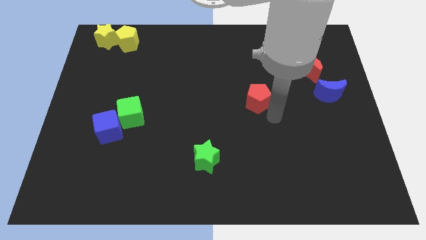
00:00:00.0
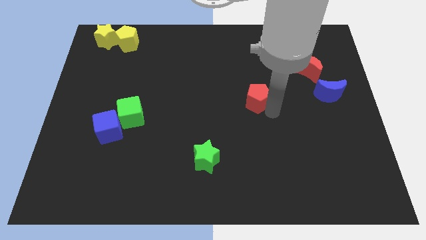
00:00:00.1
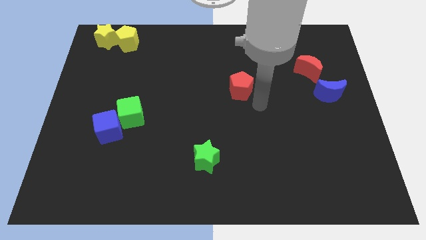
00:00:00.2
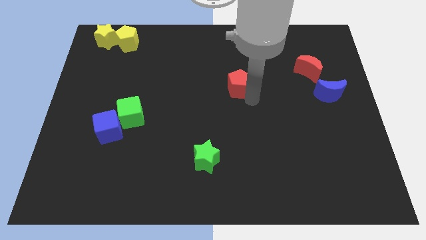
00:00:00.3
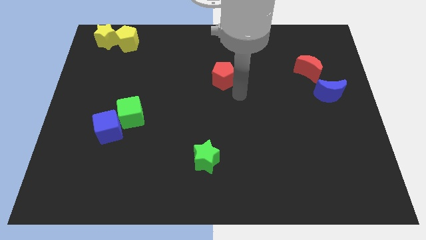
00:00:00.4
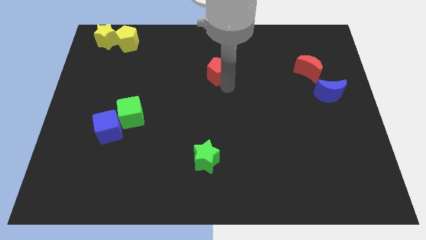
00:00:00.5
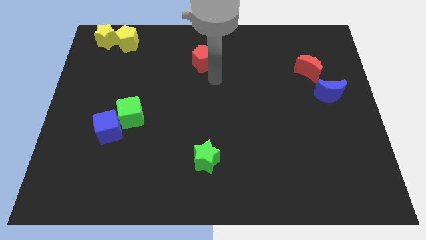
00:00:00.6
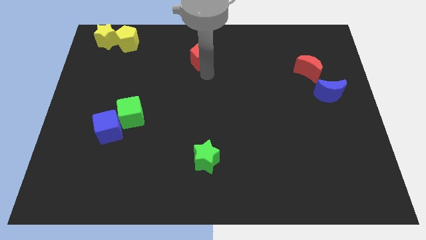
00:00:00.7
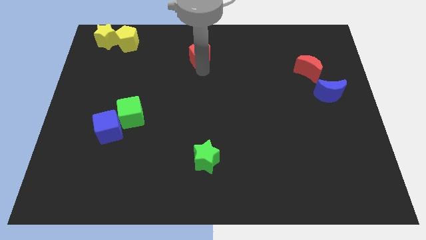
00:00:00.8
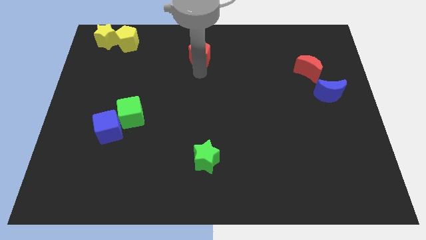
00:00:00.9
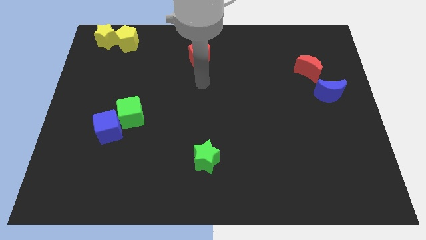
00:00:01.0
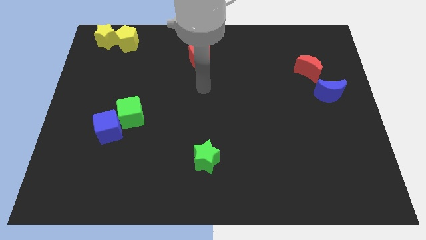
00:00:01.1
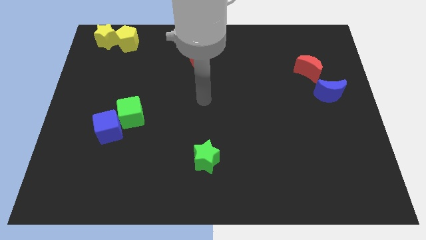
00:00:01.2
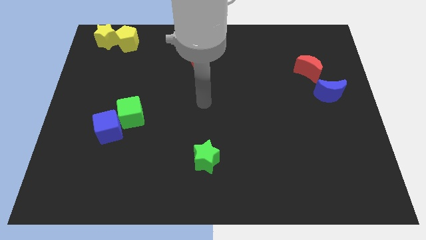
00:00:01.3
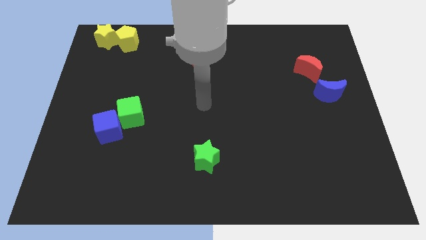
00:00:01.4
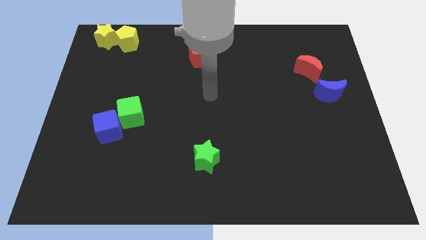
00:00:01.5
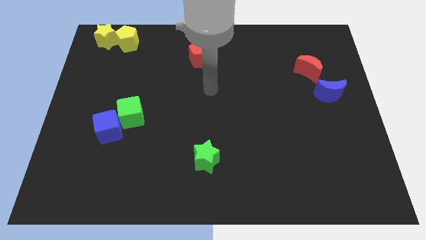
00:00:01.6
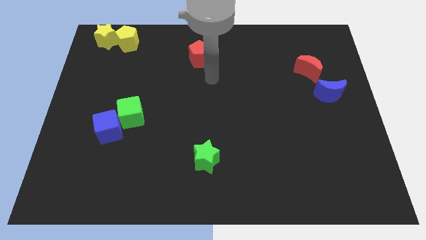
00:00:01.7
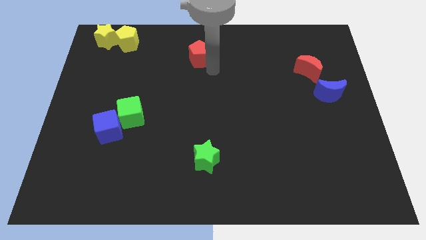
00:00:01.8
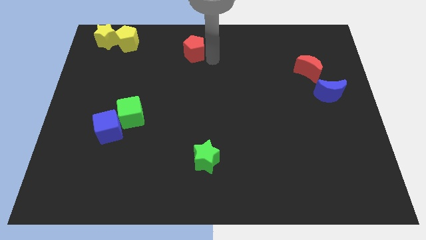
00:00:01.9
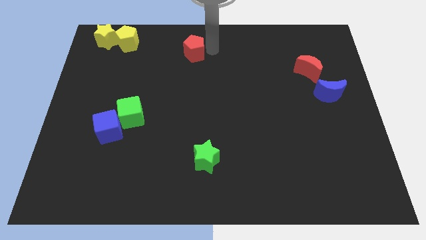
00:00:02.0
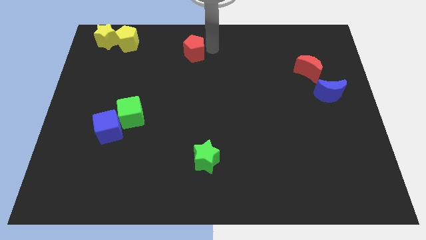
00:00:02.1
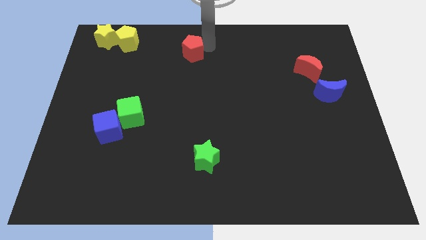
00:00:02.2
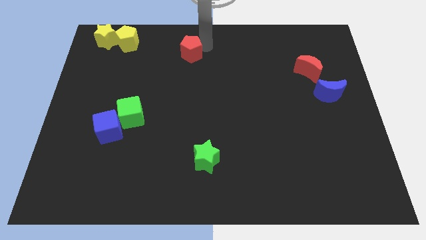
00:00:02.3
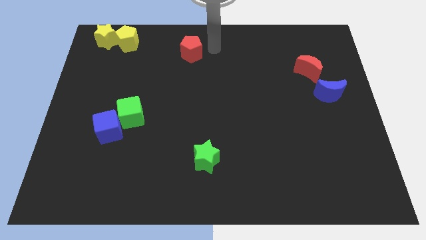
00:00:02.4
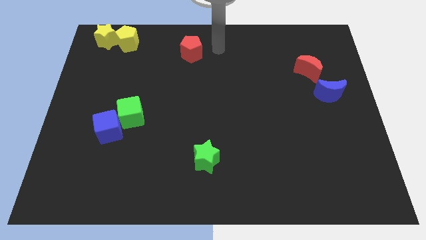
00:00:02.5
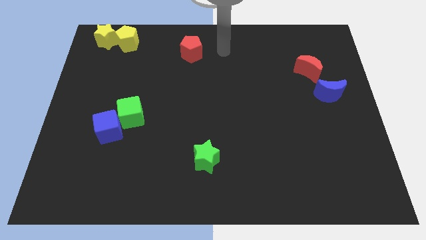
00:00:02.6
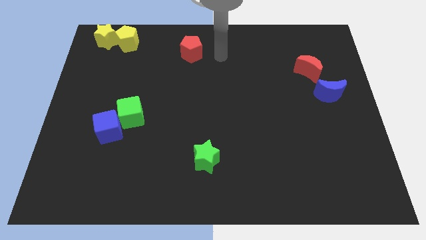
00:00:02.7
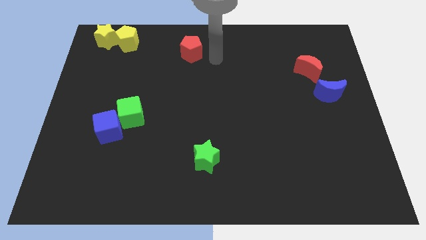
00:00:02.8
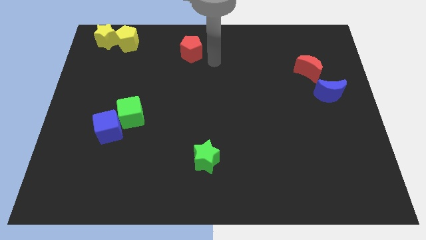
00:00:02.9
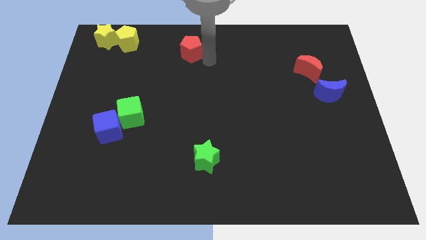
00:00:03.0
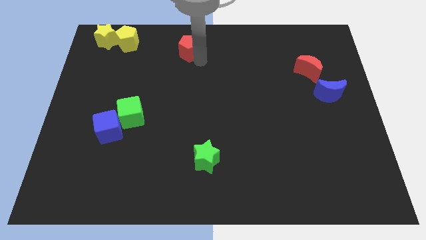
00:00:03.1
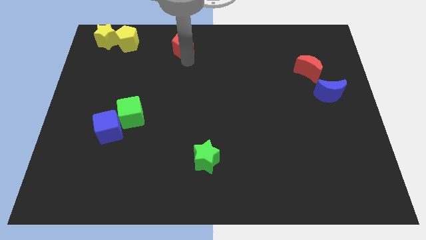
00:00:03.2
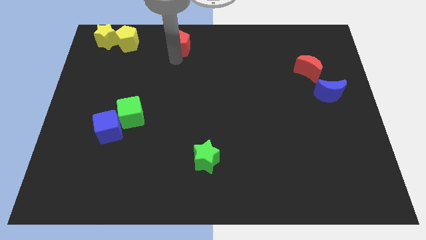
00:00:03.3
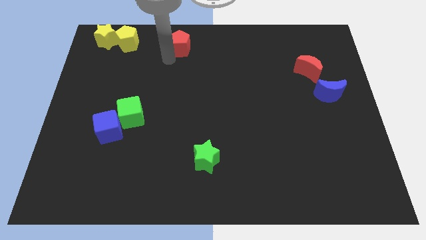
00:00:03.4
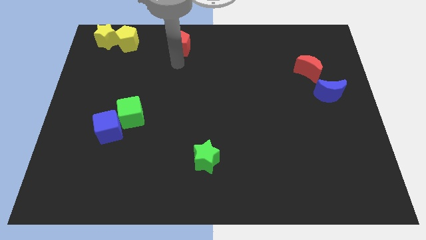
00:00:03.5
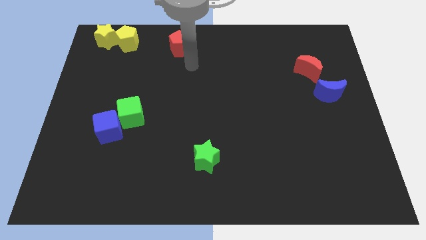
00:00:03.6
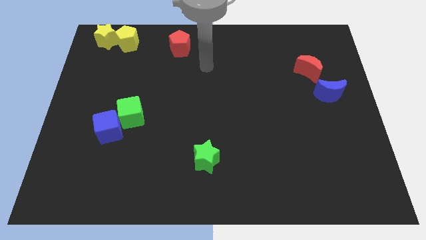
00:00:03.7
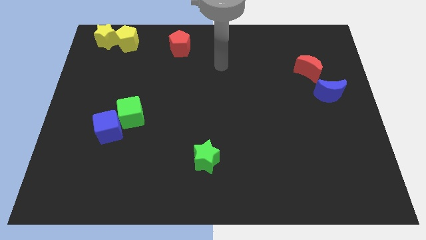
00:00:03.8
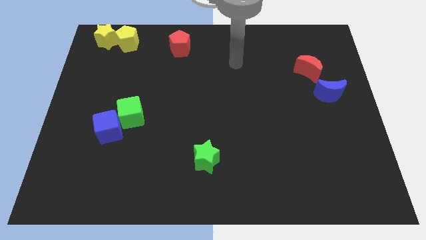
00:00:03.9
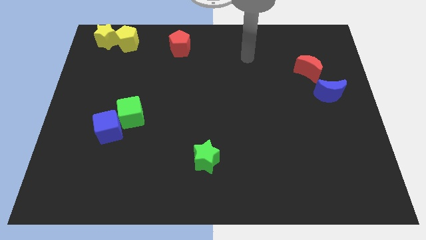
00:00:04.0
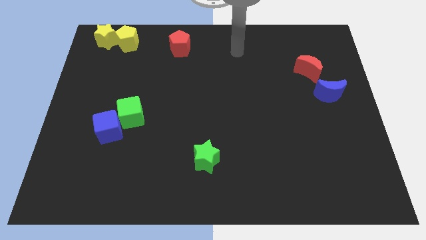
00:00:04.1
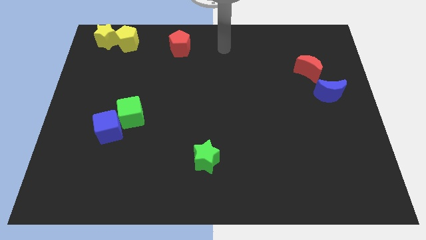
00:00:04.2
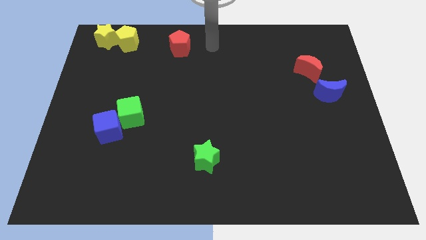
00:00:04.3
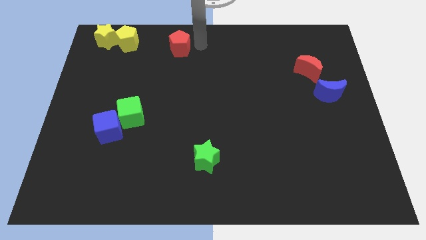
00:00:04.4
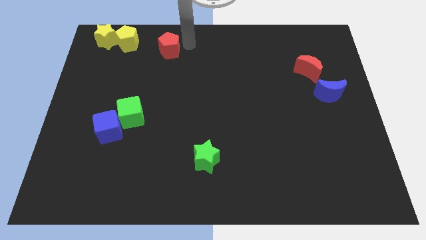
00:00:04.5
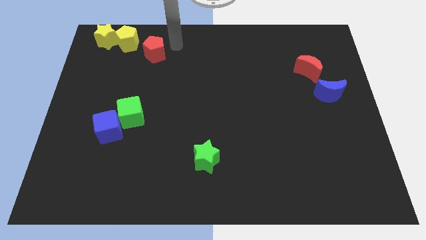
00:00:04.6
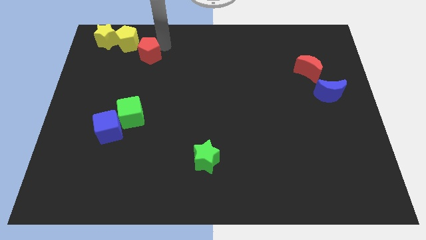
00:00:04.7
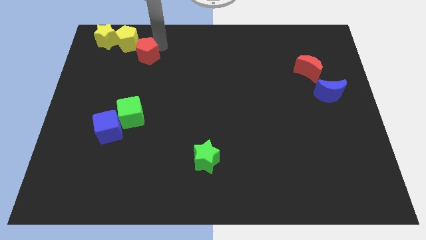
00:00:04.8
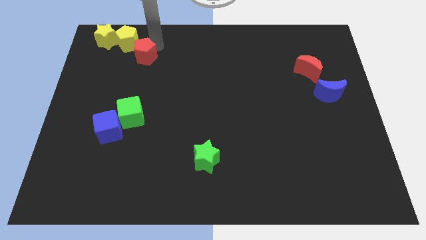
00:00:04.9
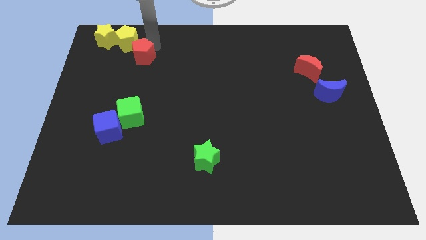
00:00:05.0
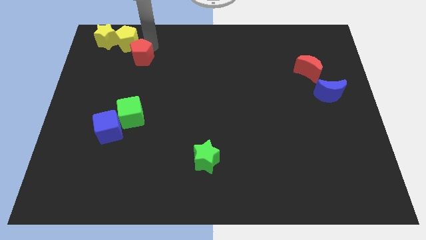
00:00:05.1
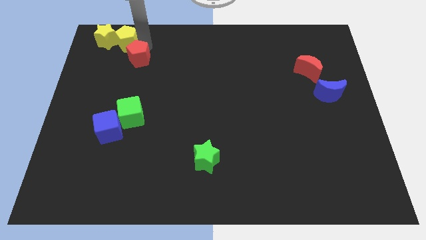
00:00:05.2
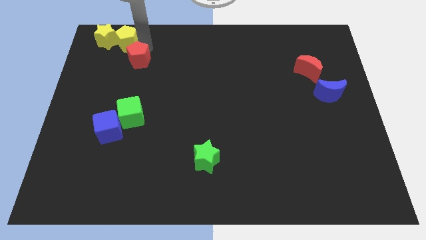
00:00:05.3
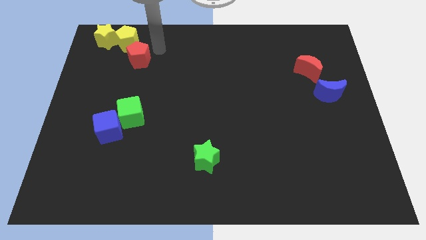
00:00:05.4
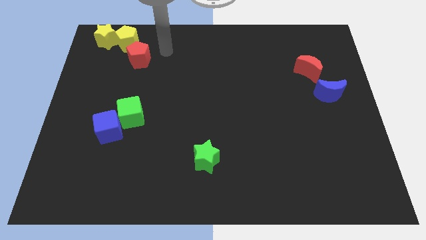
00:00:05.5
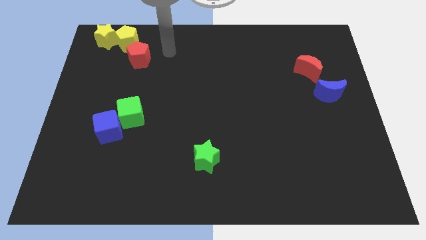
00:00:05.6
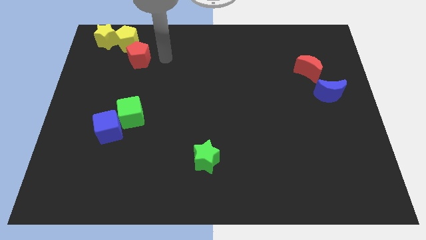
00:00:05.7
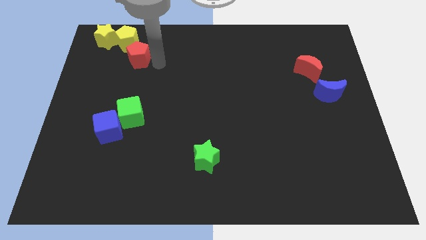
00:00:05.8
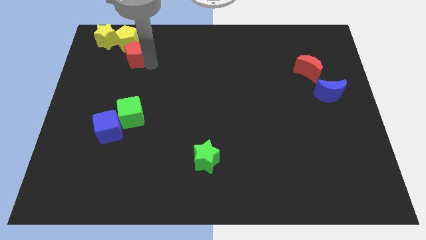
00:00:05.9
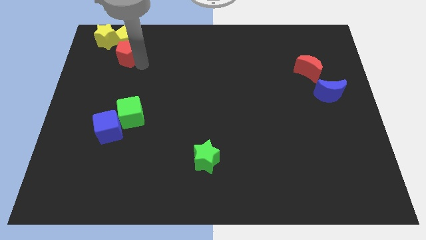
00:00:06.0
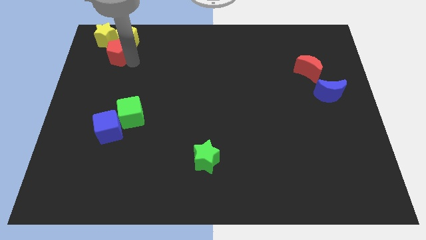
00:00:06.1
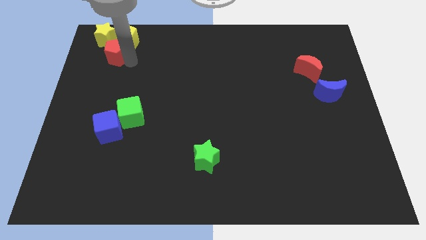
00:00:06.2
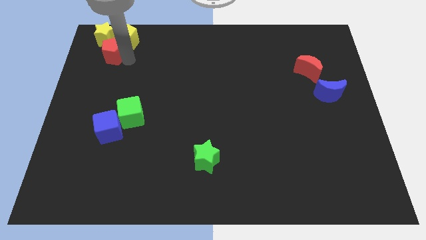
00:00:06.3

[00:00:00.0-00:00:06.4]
place the red pentagon to the bottom of the yellow pentagon

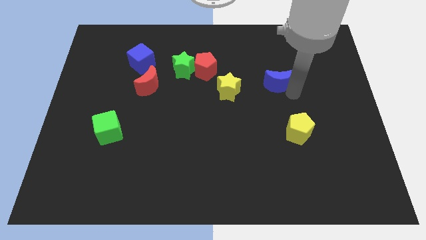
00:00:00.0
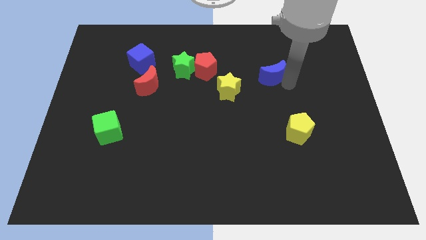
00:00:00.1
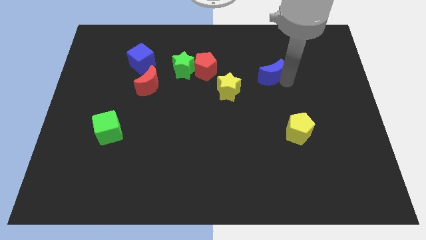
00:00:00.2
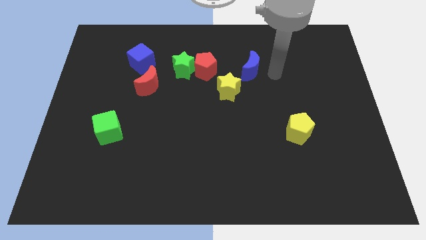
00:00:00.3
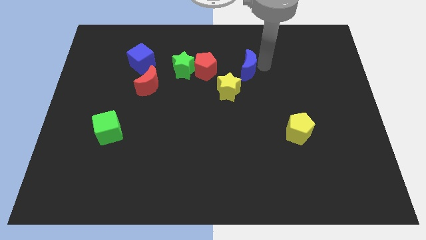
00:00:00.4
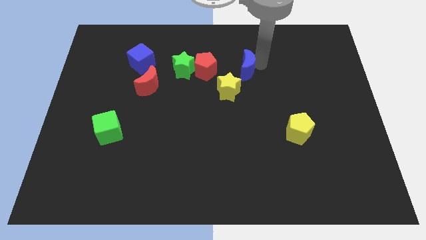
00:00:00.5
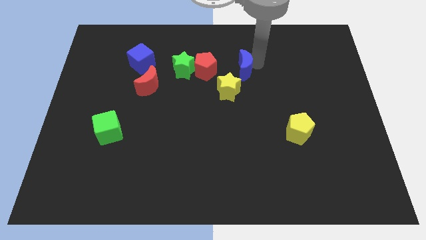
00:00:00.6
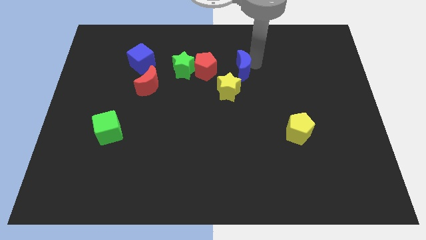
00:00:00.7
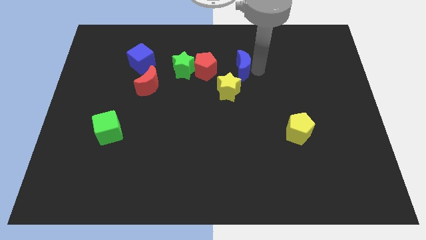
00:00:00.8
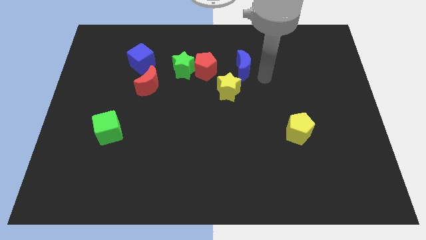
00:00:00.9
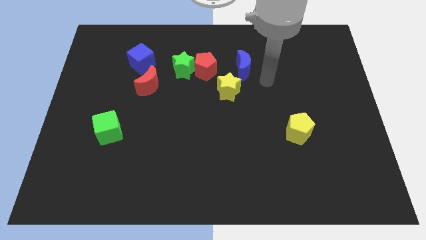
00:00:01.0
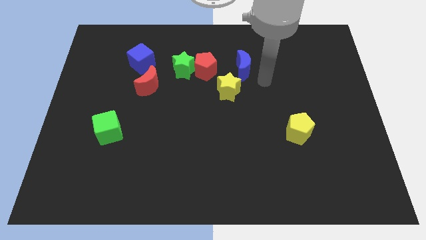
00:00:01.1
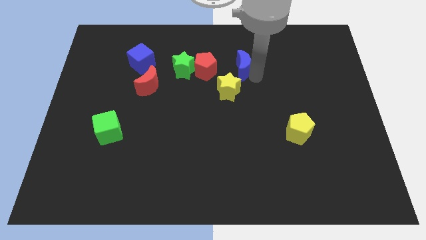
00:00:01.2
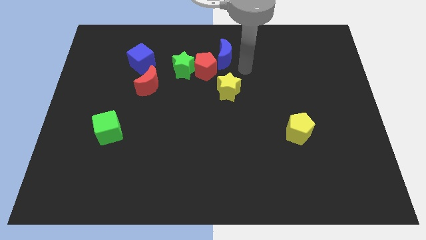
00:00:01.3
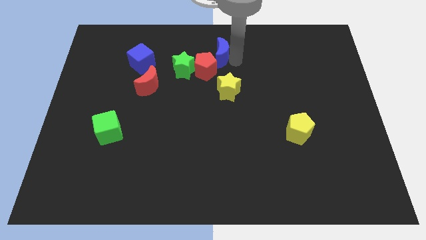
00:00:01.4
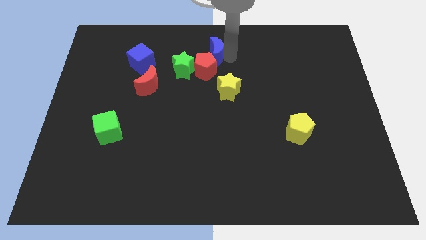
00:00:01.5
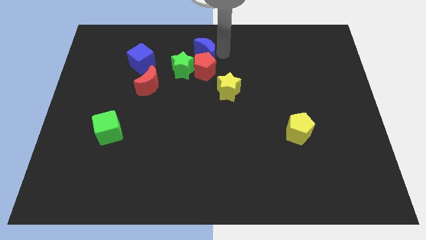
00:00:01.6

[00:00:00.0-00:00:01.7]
push the blue moon into the red pentagon

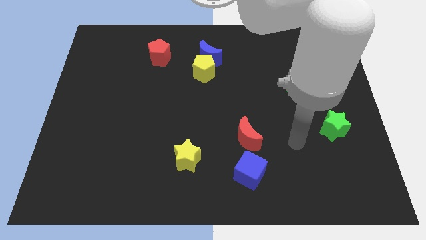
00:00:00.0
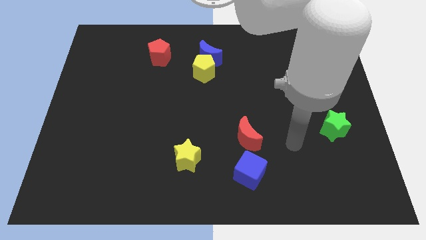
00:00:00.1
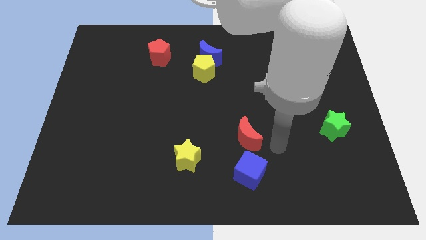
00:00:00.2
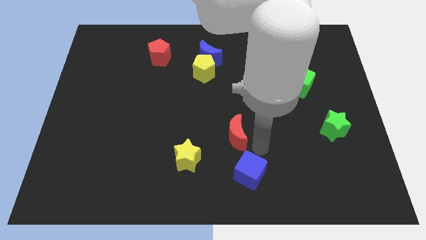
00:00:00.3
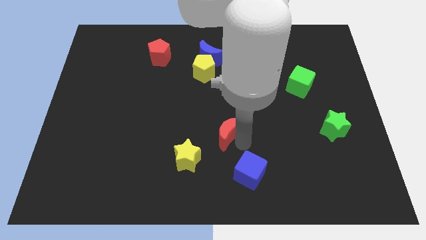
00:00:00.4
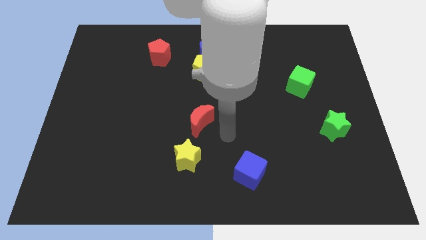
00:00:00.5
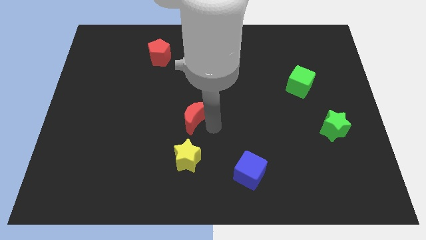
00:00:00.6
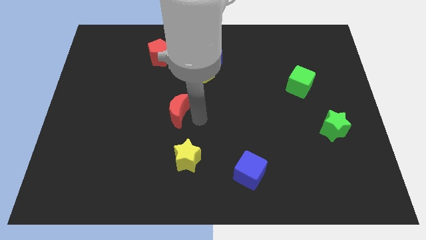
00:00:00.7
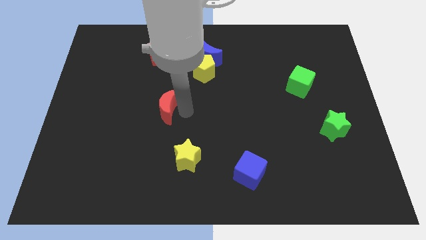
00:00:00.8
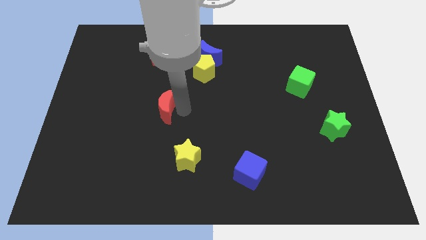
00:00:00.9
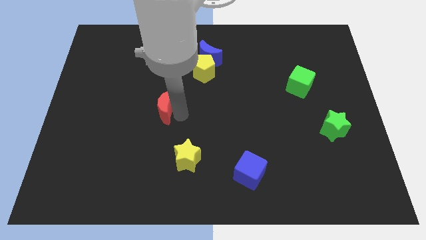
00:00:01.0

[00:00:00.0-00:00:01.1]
push the red crescent towards the center left of the board
